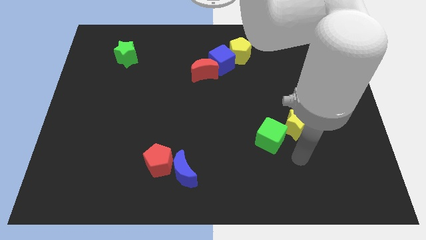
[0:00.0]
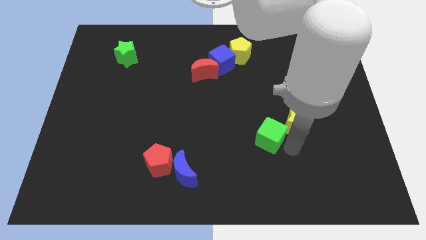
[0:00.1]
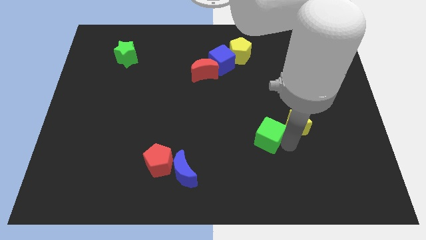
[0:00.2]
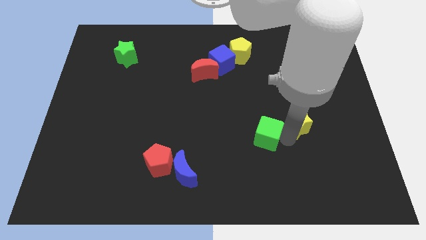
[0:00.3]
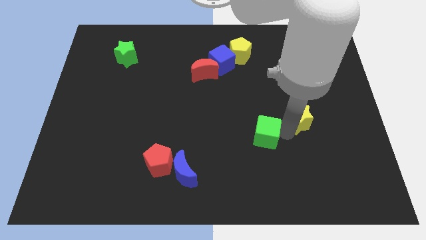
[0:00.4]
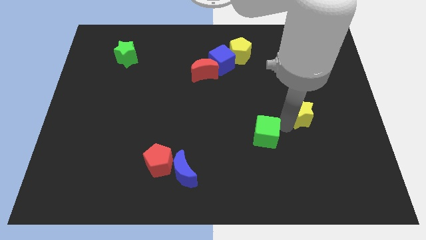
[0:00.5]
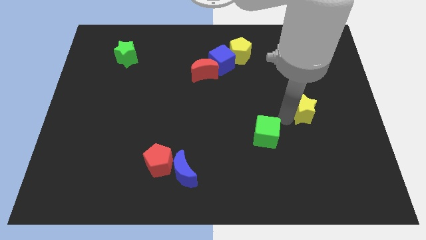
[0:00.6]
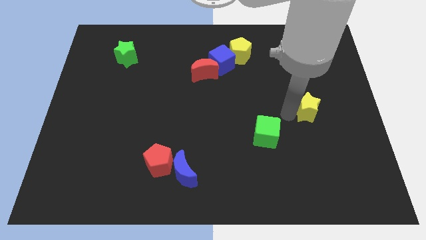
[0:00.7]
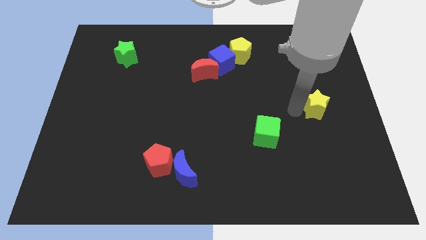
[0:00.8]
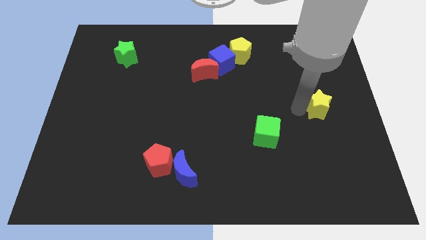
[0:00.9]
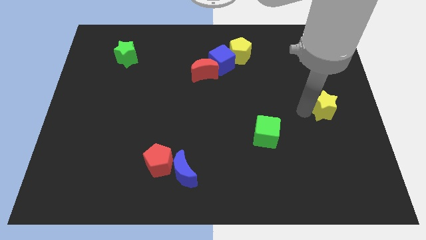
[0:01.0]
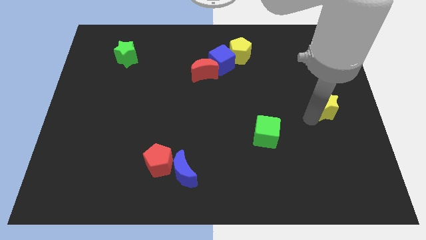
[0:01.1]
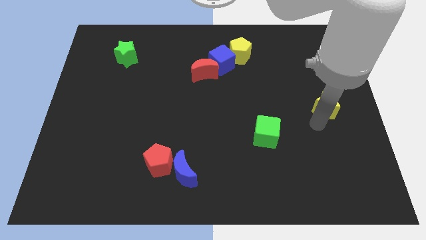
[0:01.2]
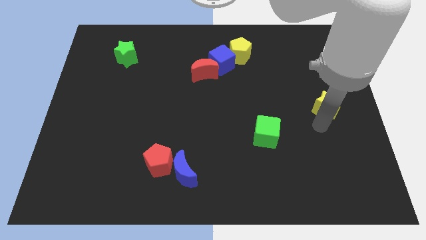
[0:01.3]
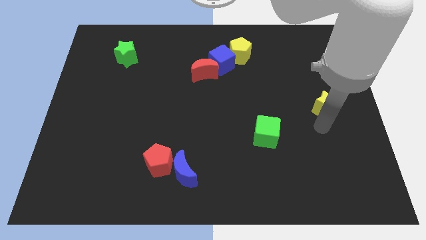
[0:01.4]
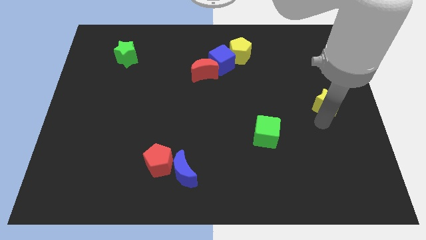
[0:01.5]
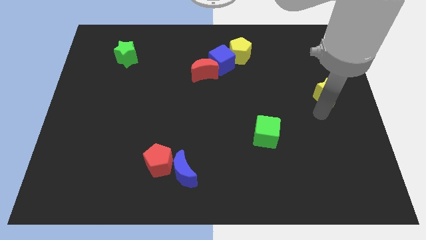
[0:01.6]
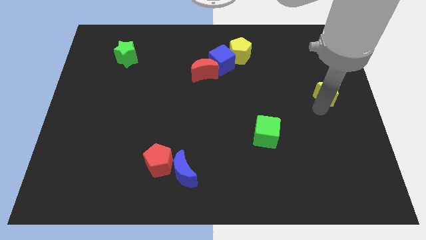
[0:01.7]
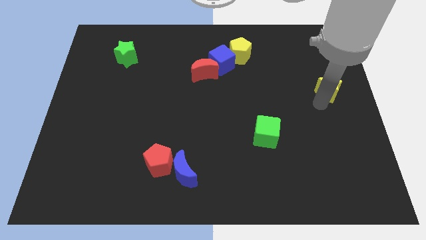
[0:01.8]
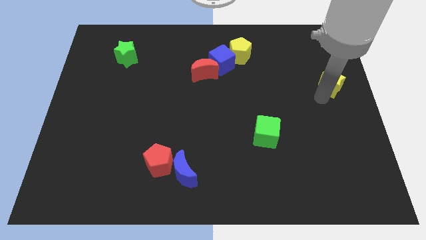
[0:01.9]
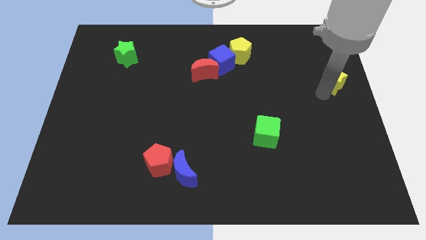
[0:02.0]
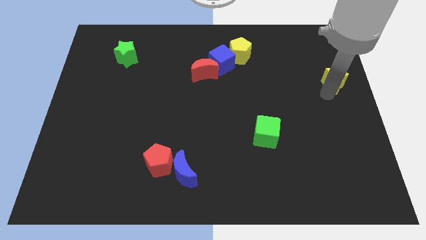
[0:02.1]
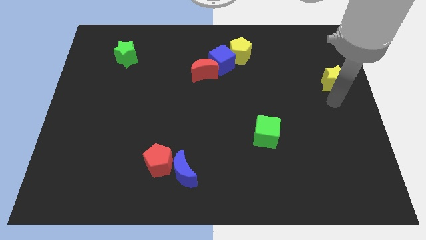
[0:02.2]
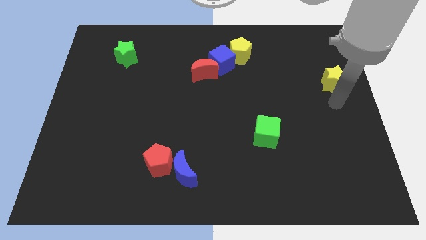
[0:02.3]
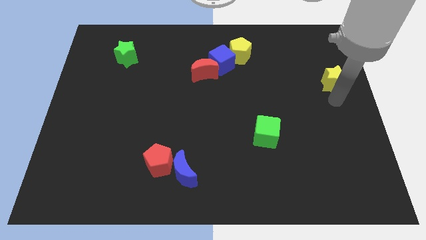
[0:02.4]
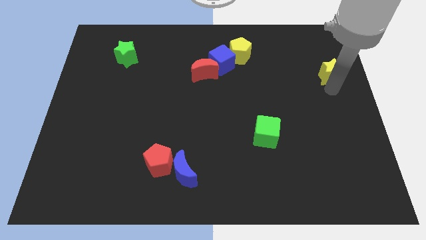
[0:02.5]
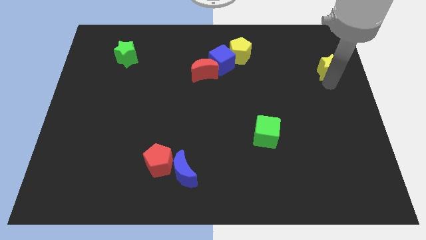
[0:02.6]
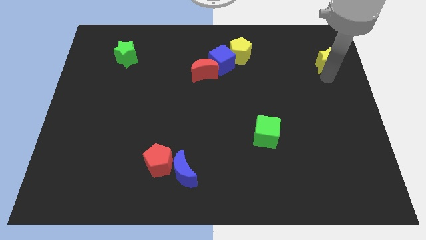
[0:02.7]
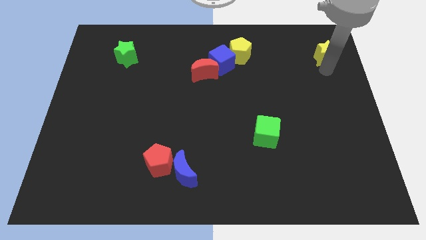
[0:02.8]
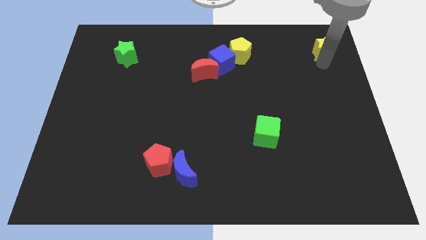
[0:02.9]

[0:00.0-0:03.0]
move the yellow star to the right of the yellow pentagon

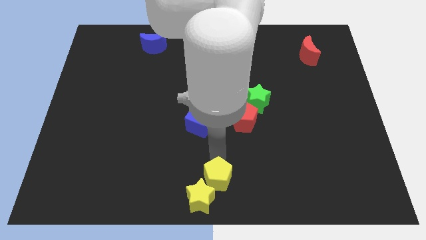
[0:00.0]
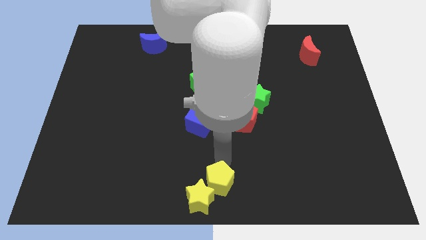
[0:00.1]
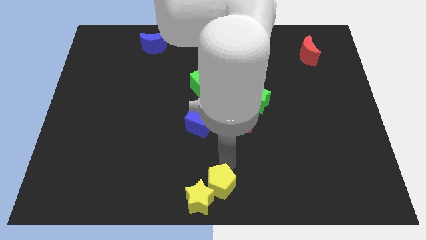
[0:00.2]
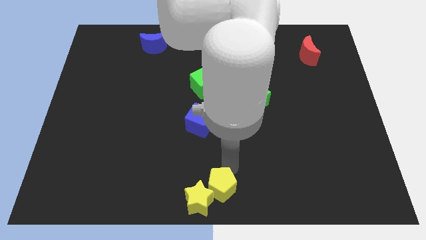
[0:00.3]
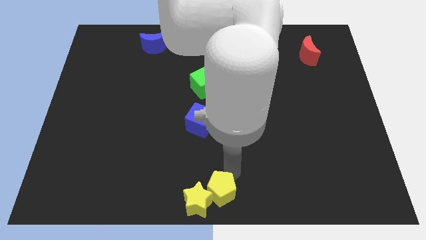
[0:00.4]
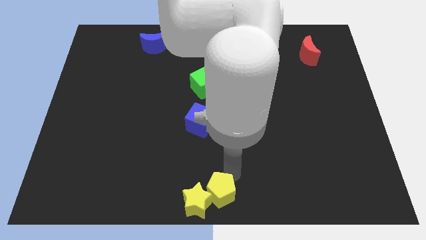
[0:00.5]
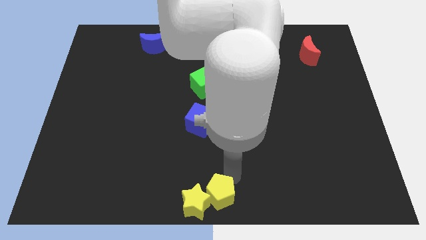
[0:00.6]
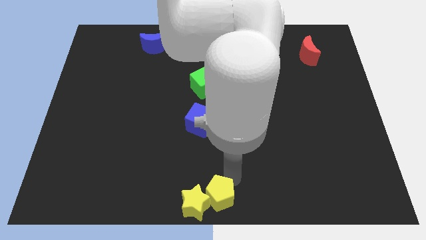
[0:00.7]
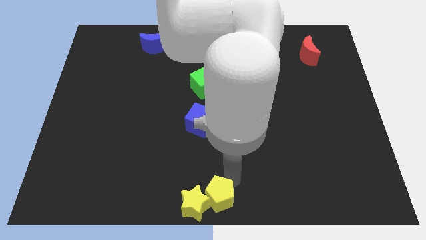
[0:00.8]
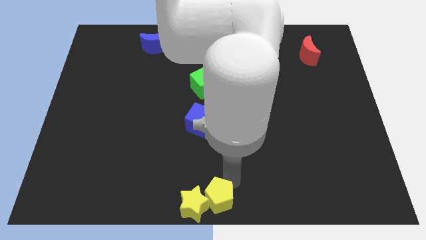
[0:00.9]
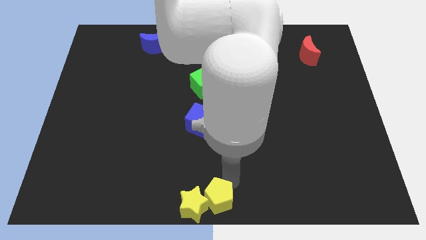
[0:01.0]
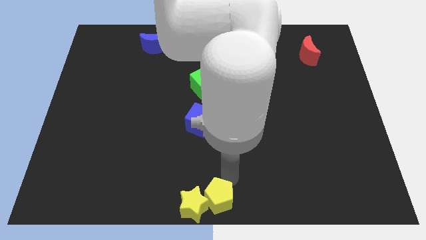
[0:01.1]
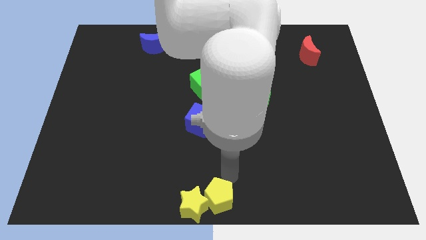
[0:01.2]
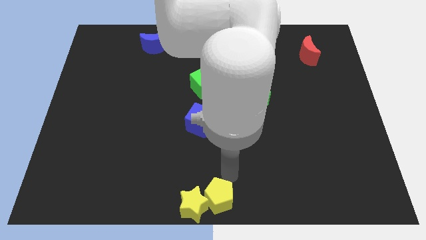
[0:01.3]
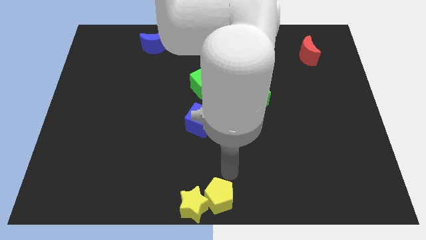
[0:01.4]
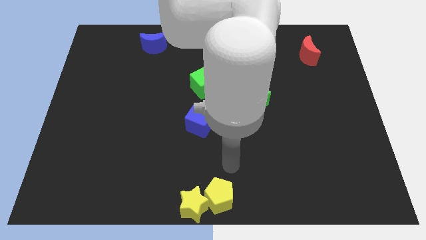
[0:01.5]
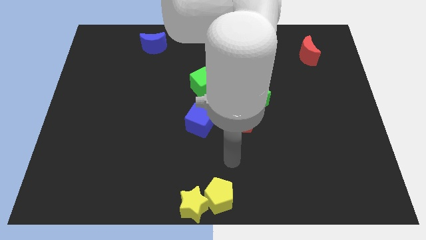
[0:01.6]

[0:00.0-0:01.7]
push the yellow pentagon towards the bottom center of the board

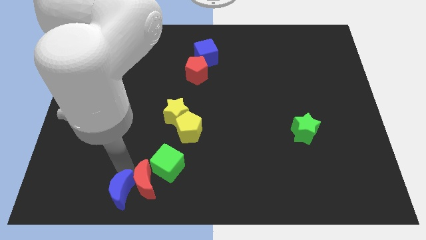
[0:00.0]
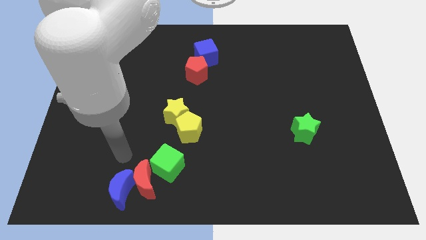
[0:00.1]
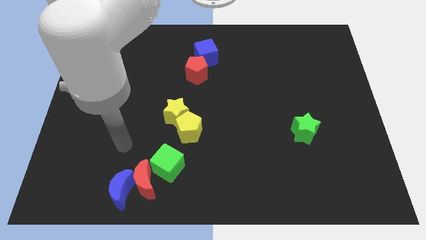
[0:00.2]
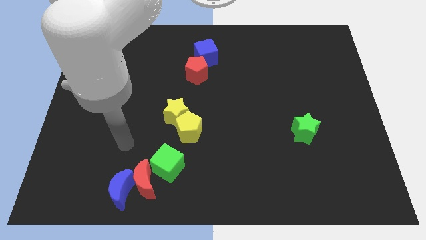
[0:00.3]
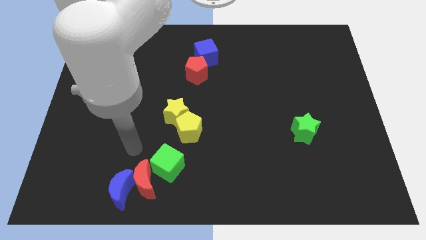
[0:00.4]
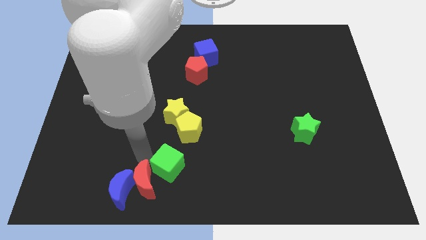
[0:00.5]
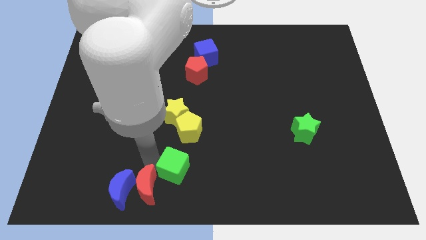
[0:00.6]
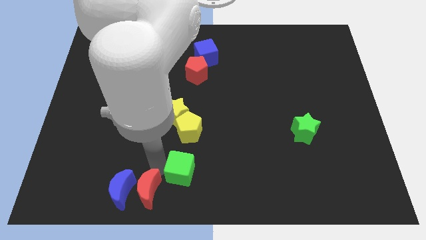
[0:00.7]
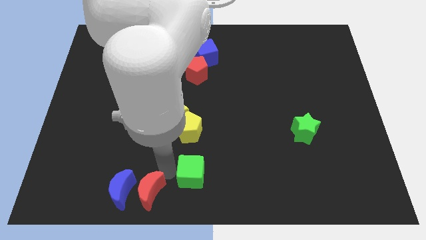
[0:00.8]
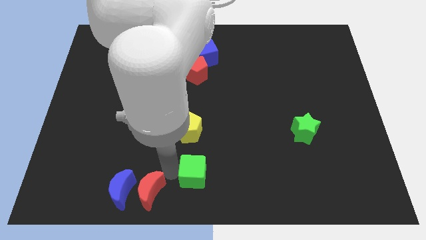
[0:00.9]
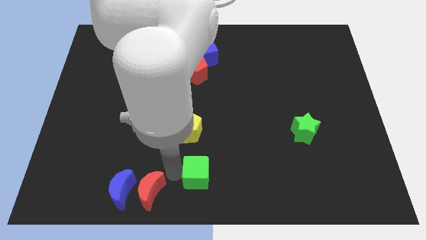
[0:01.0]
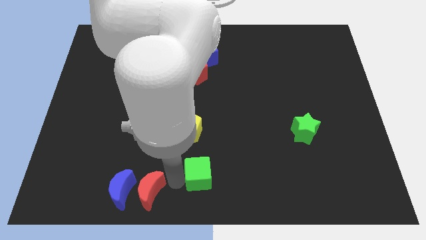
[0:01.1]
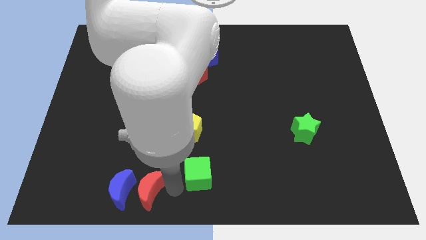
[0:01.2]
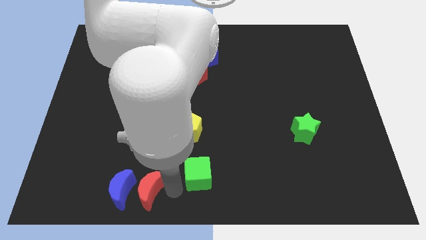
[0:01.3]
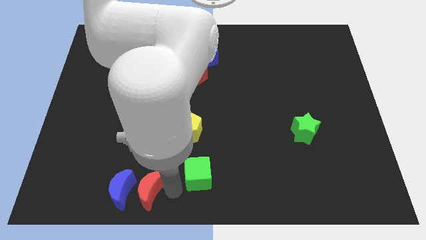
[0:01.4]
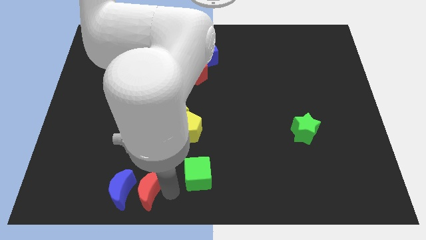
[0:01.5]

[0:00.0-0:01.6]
push the red crescent to the right of the blue crescent along with the green cube

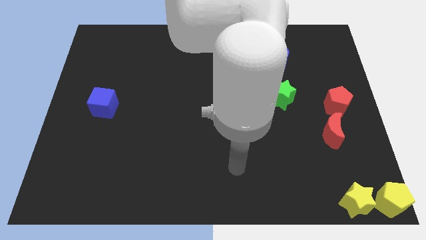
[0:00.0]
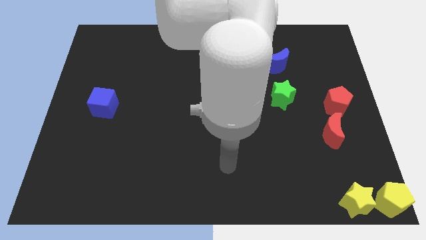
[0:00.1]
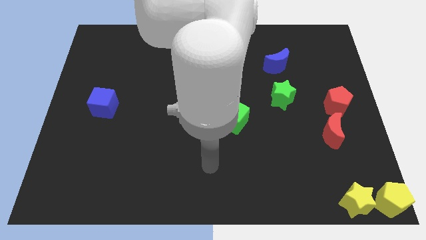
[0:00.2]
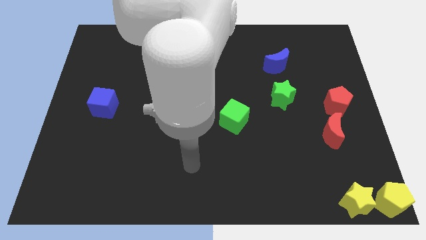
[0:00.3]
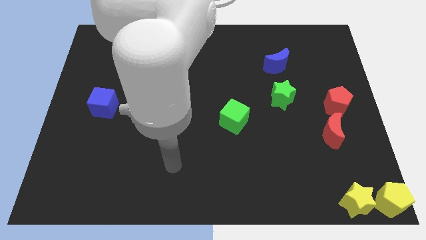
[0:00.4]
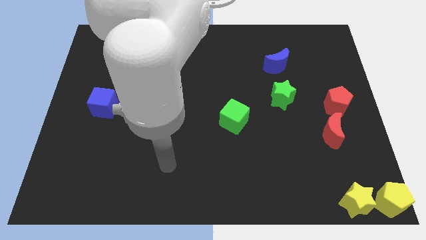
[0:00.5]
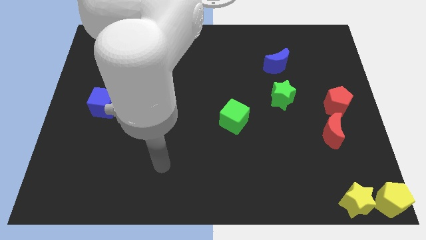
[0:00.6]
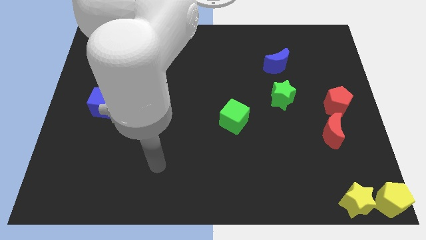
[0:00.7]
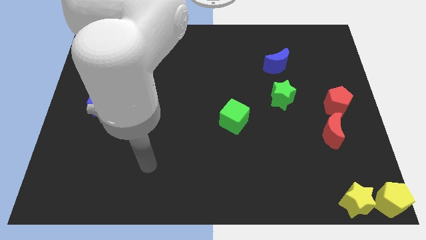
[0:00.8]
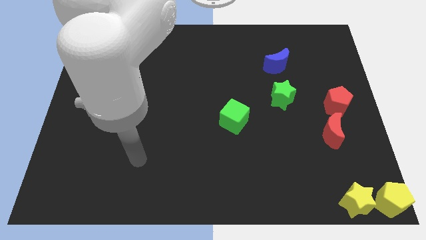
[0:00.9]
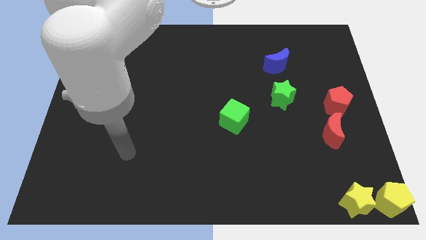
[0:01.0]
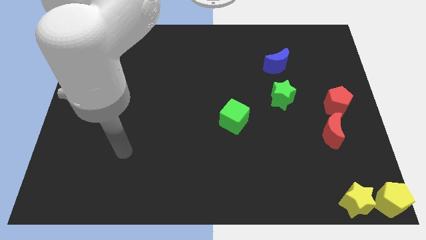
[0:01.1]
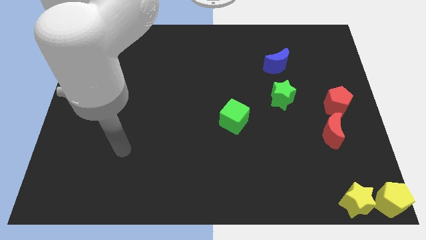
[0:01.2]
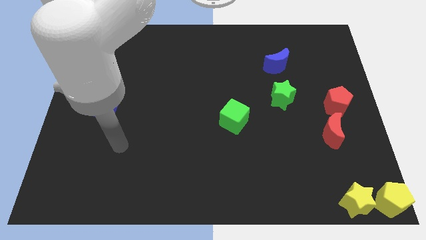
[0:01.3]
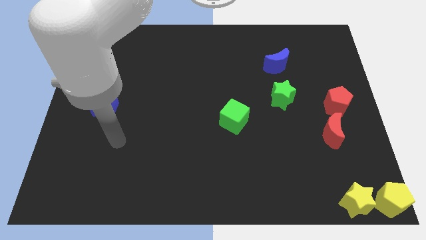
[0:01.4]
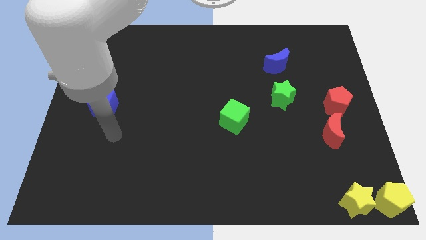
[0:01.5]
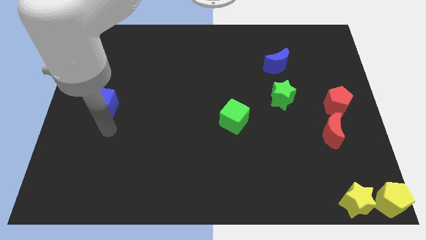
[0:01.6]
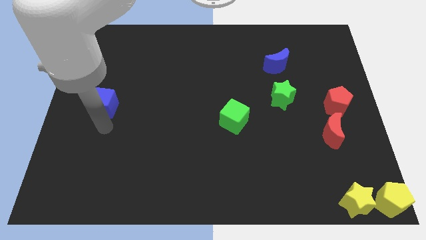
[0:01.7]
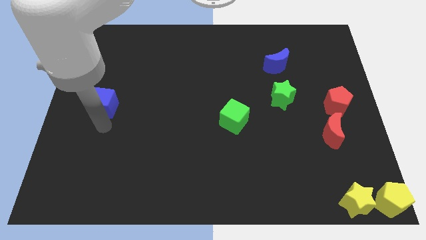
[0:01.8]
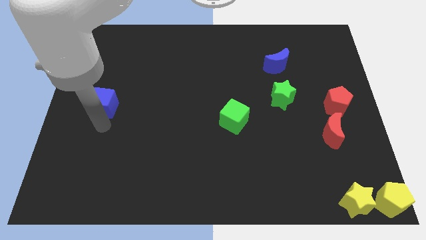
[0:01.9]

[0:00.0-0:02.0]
place your arm at the bottom of the blue cube

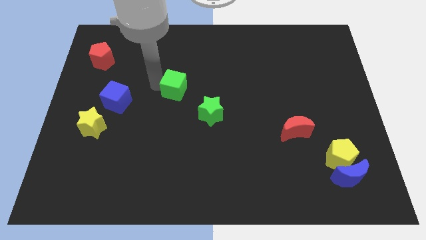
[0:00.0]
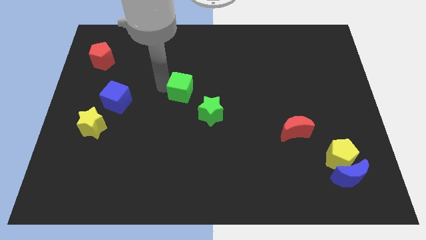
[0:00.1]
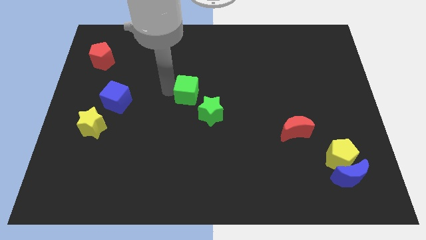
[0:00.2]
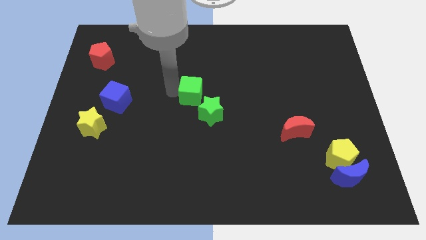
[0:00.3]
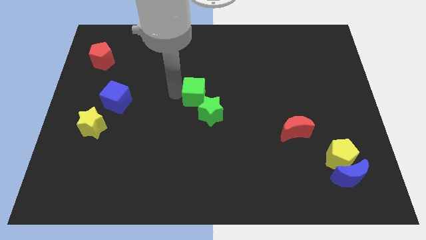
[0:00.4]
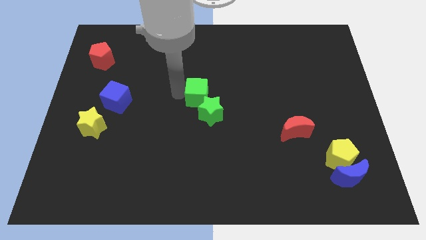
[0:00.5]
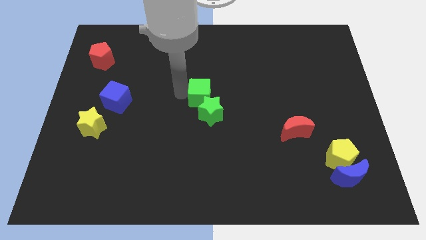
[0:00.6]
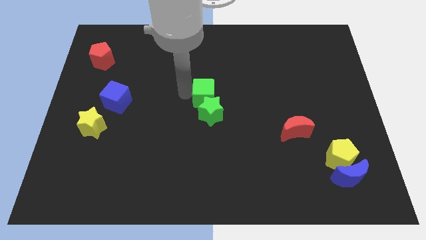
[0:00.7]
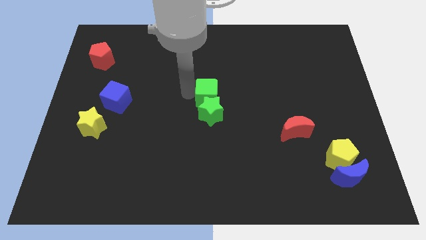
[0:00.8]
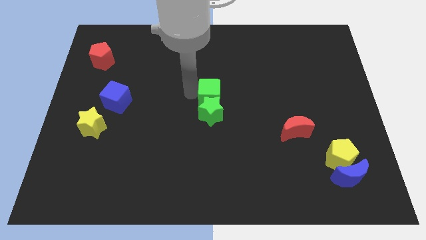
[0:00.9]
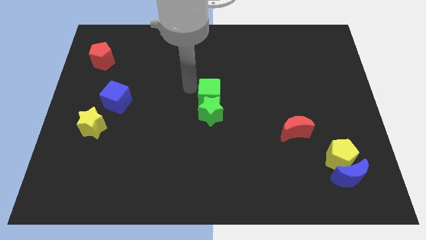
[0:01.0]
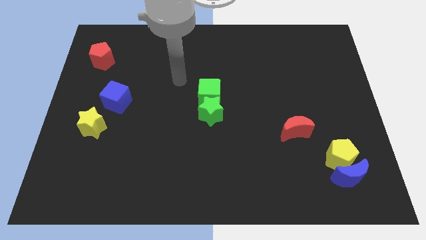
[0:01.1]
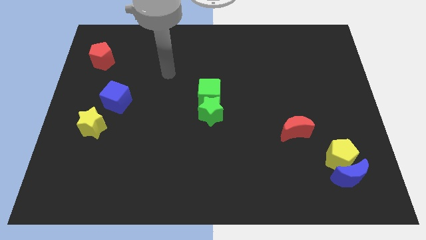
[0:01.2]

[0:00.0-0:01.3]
push the green cube close to the top of green star
